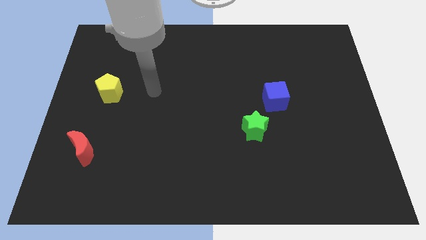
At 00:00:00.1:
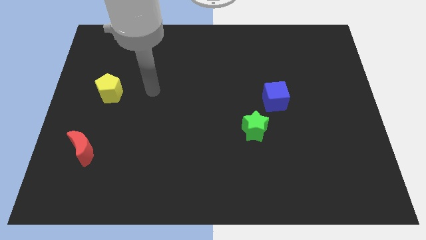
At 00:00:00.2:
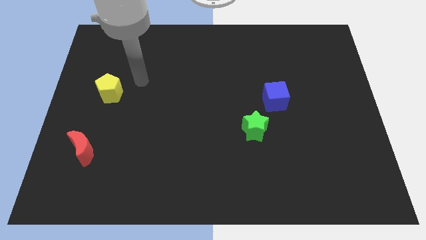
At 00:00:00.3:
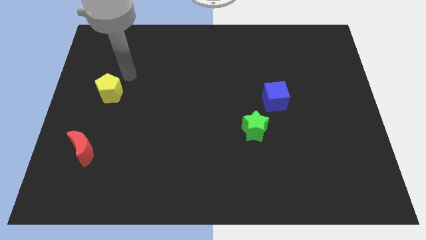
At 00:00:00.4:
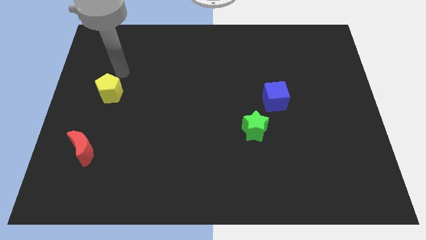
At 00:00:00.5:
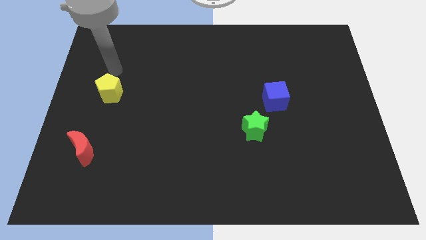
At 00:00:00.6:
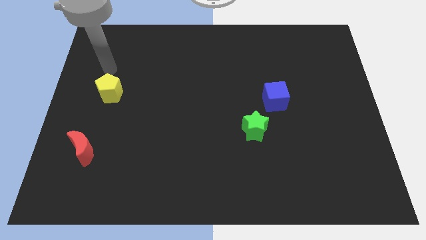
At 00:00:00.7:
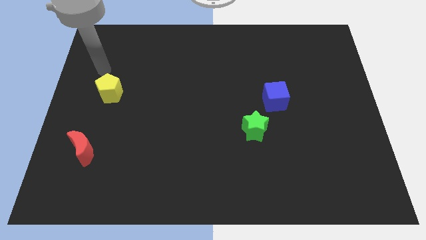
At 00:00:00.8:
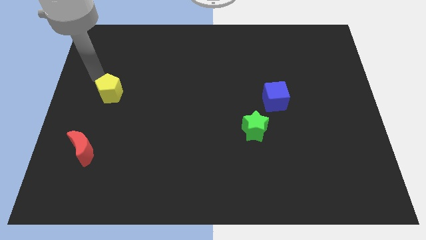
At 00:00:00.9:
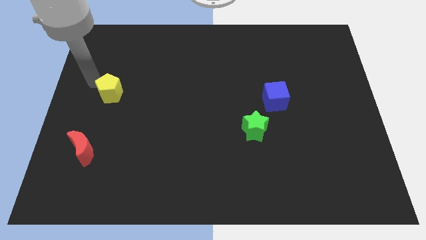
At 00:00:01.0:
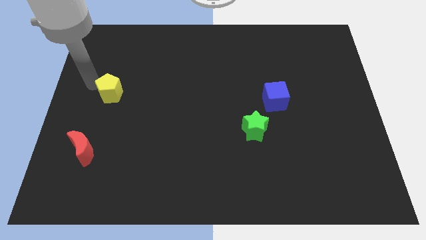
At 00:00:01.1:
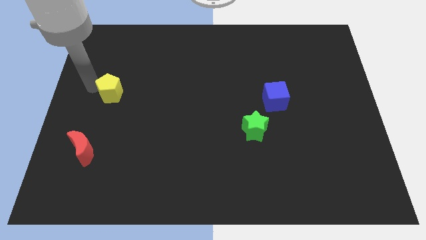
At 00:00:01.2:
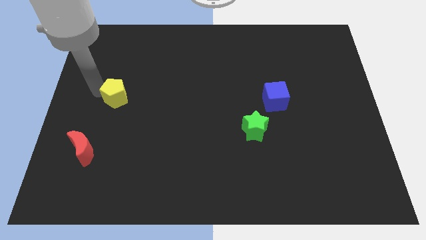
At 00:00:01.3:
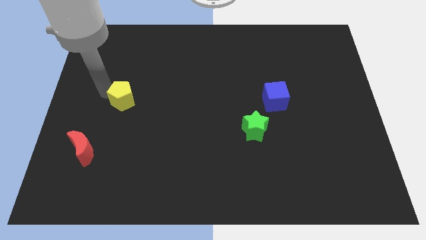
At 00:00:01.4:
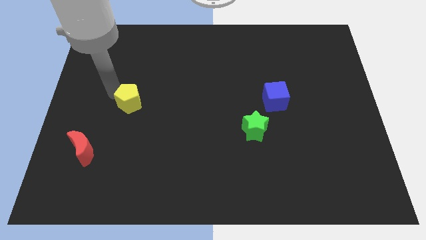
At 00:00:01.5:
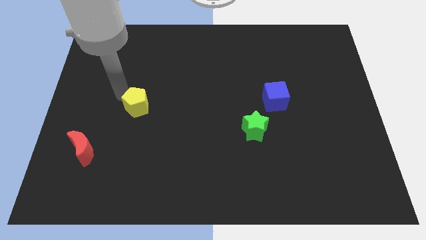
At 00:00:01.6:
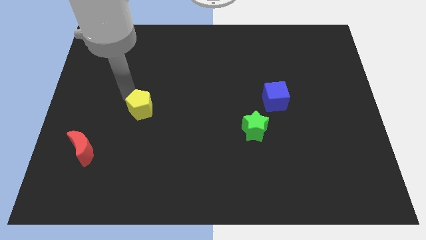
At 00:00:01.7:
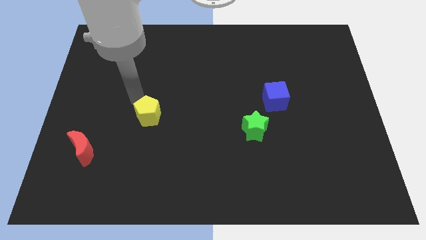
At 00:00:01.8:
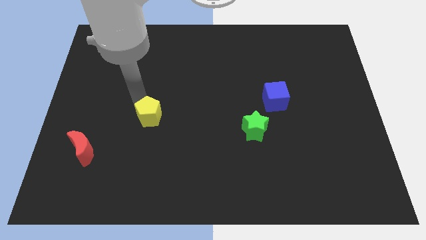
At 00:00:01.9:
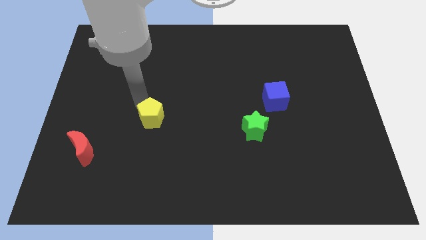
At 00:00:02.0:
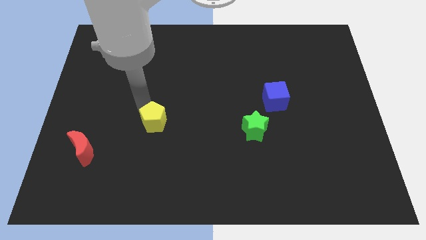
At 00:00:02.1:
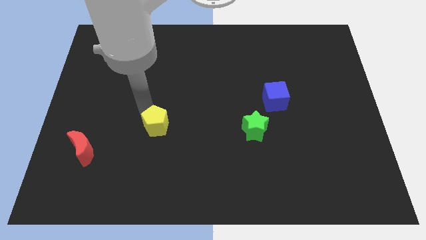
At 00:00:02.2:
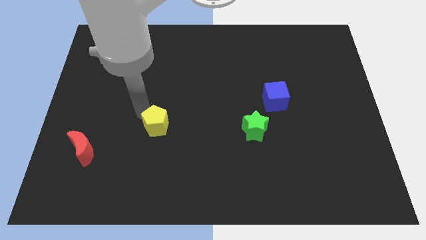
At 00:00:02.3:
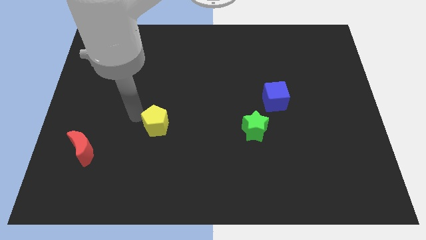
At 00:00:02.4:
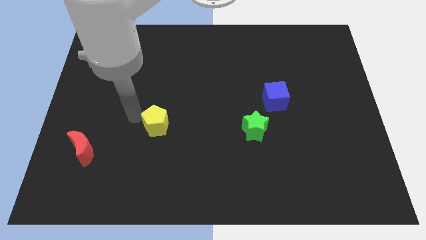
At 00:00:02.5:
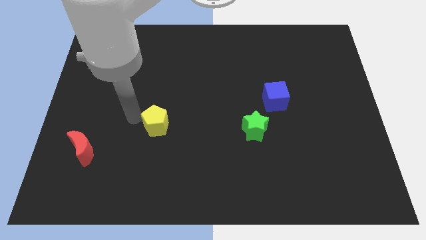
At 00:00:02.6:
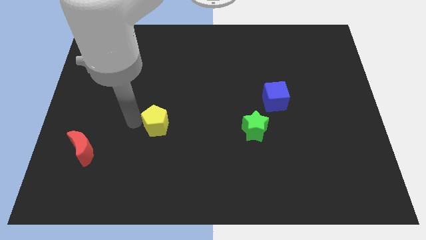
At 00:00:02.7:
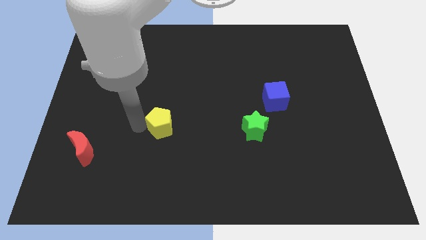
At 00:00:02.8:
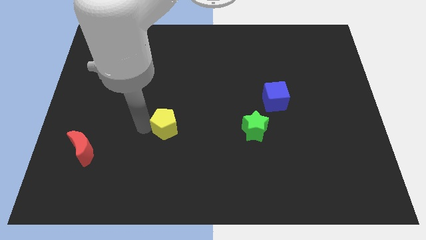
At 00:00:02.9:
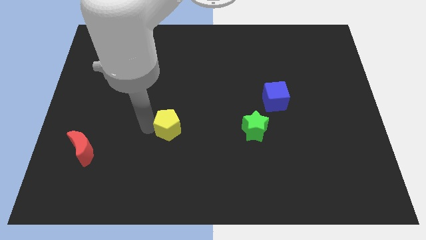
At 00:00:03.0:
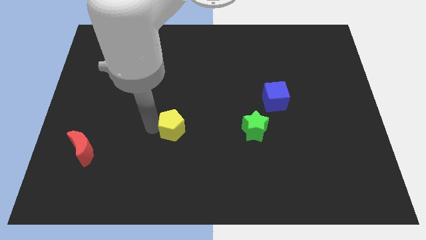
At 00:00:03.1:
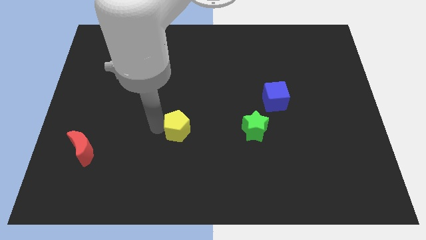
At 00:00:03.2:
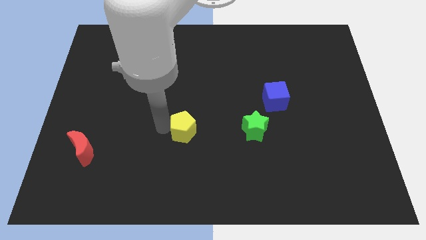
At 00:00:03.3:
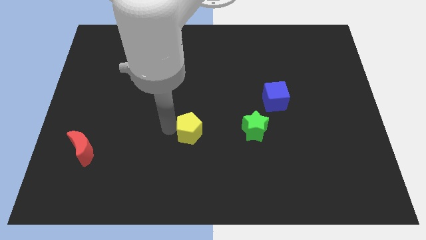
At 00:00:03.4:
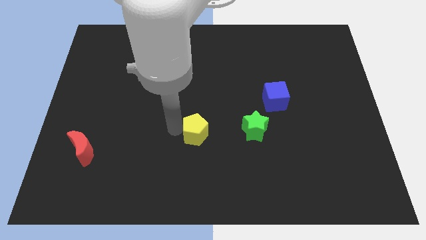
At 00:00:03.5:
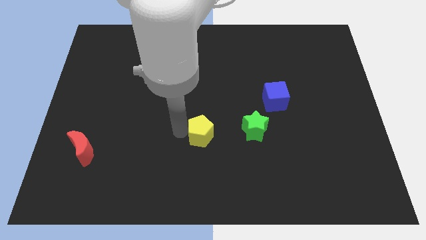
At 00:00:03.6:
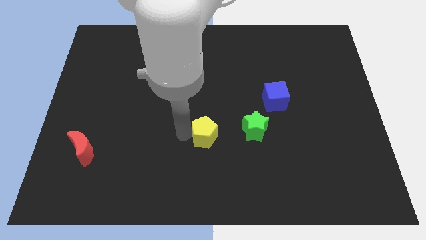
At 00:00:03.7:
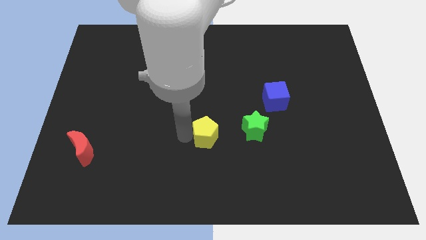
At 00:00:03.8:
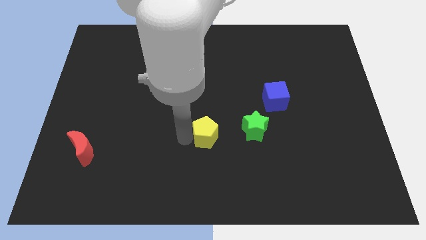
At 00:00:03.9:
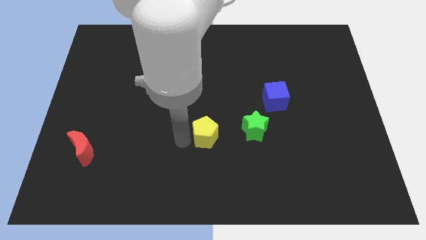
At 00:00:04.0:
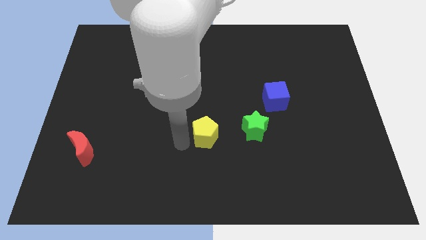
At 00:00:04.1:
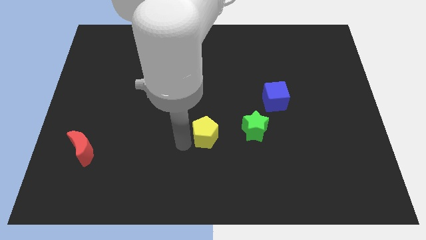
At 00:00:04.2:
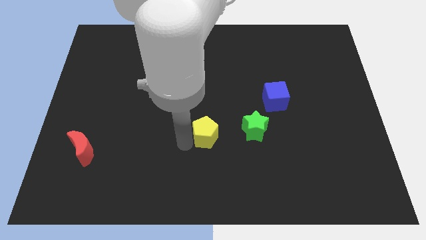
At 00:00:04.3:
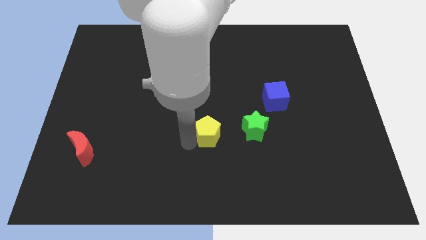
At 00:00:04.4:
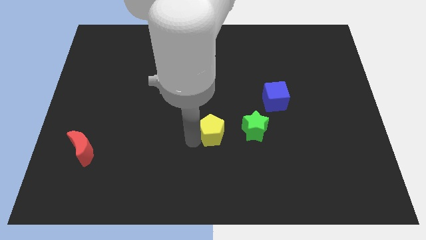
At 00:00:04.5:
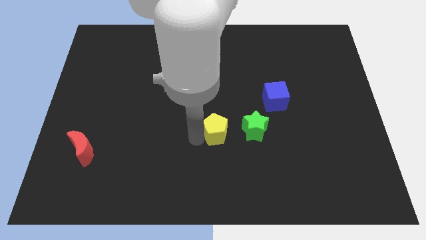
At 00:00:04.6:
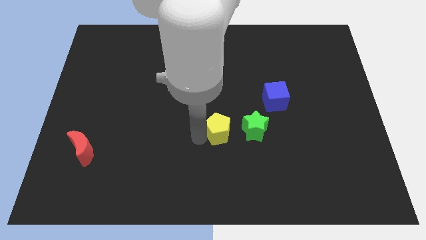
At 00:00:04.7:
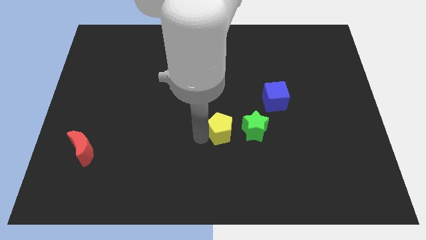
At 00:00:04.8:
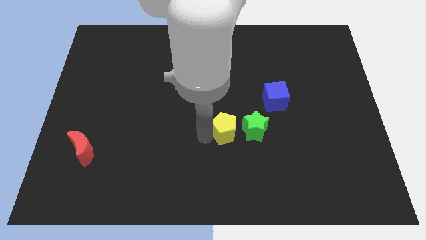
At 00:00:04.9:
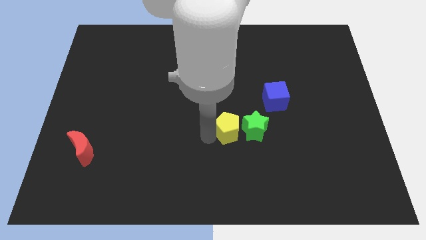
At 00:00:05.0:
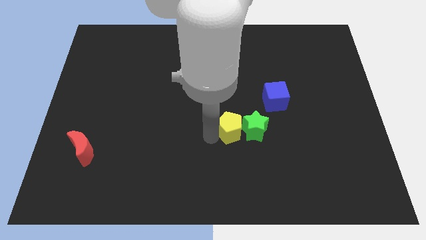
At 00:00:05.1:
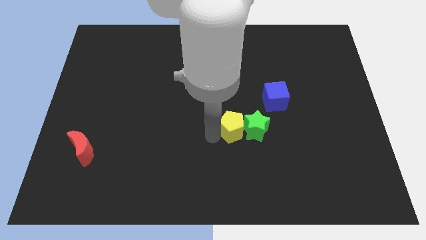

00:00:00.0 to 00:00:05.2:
push the pentagon towards the green block

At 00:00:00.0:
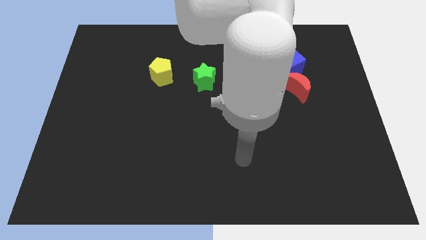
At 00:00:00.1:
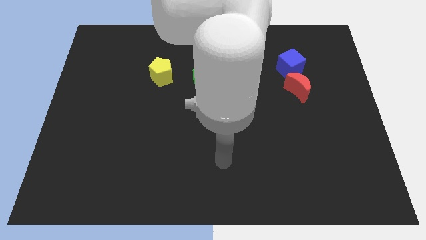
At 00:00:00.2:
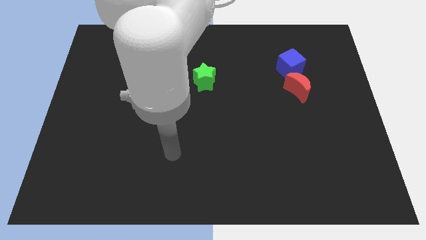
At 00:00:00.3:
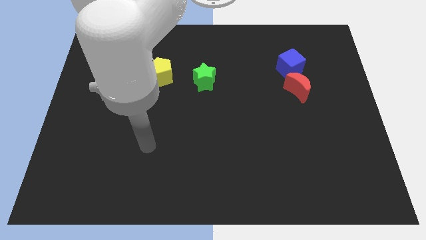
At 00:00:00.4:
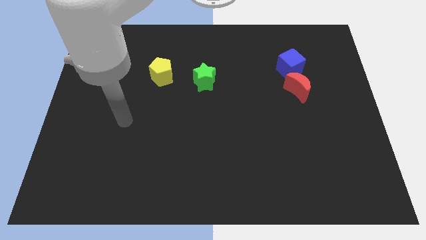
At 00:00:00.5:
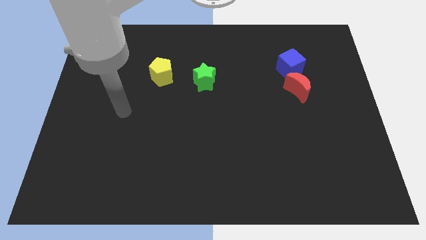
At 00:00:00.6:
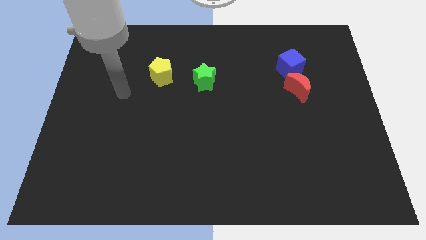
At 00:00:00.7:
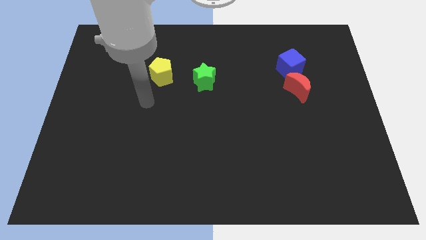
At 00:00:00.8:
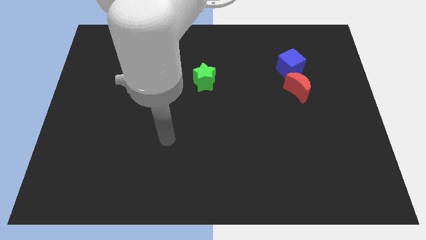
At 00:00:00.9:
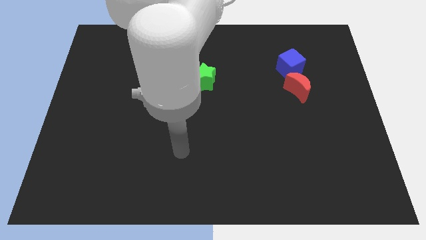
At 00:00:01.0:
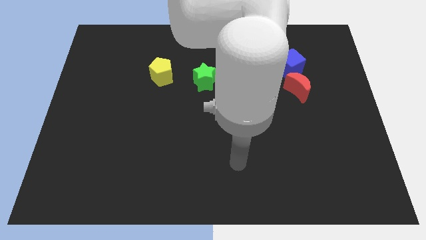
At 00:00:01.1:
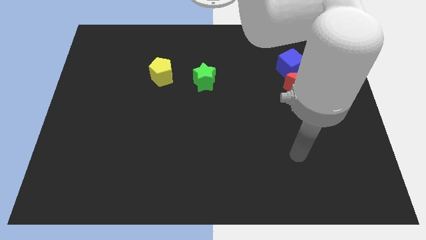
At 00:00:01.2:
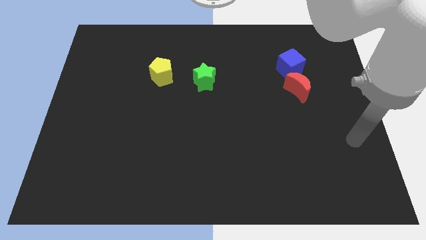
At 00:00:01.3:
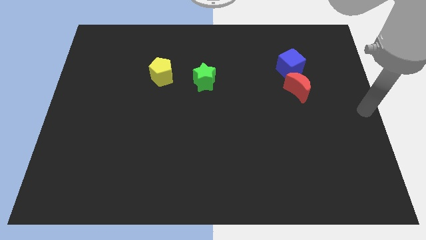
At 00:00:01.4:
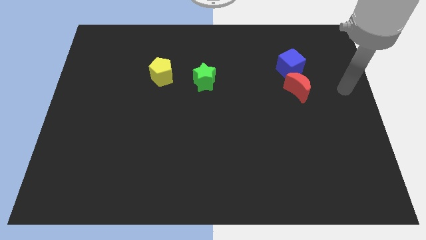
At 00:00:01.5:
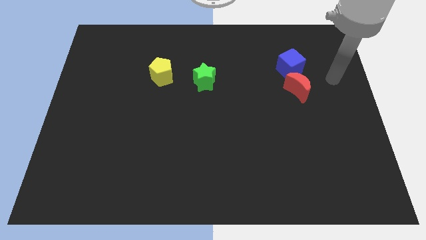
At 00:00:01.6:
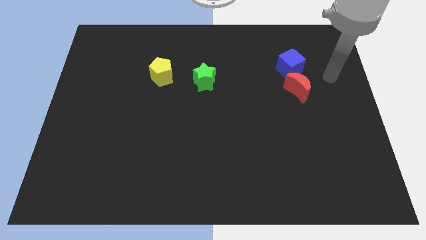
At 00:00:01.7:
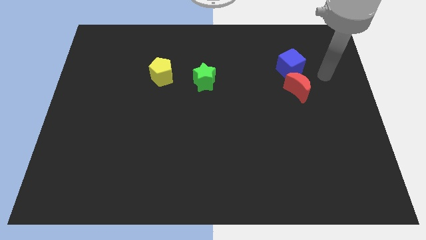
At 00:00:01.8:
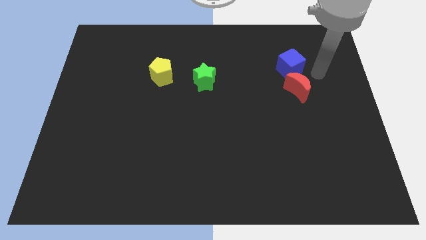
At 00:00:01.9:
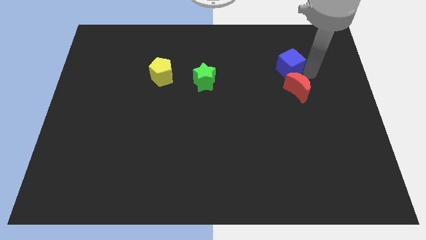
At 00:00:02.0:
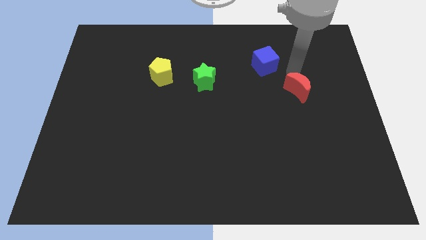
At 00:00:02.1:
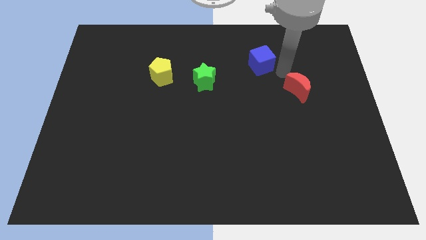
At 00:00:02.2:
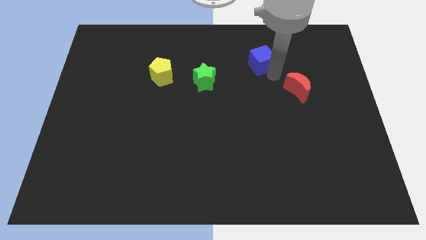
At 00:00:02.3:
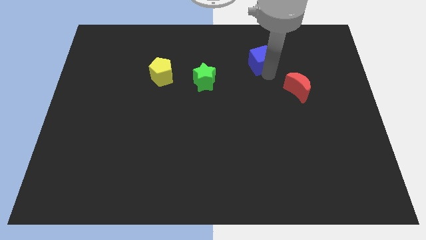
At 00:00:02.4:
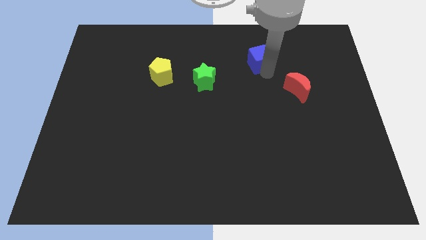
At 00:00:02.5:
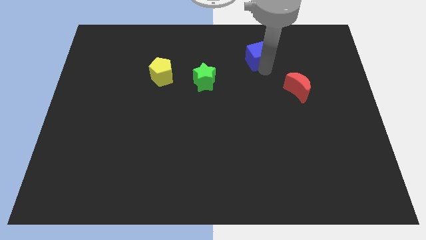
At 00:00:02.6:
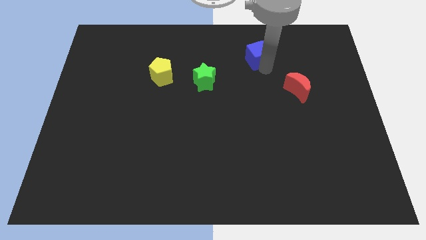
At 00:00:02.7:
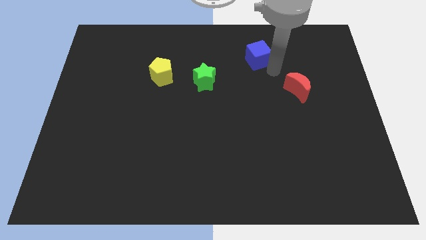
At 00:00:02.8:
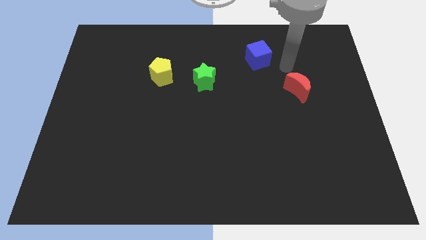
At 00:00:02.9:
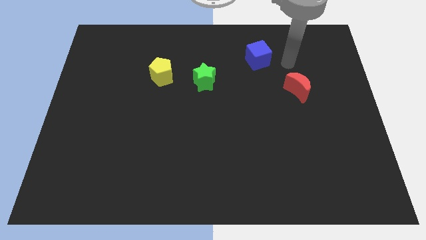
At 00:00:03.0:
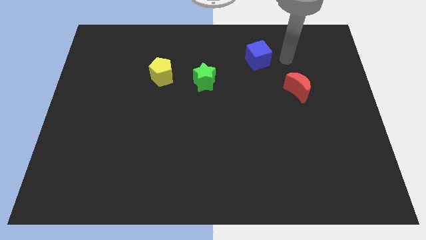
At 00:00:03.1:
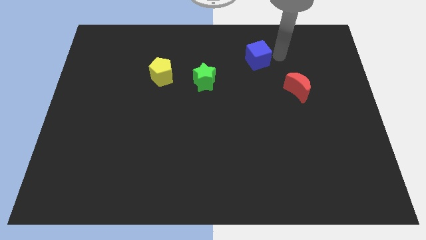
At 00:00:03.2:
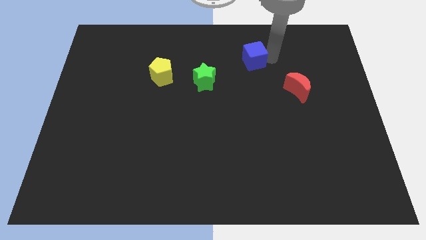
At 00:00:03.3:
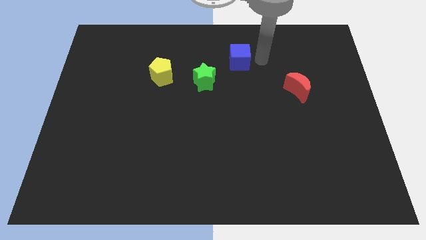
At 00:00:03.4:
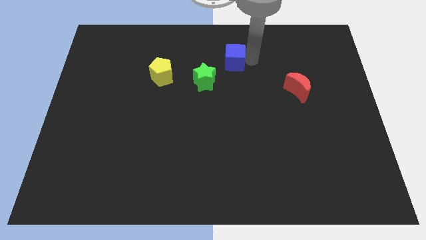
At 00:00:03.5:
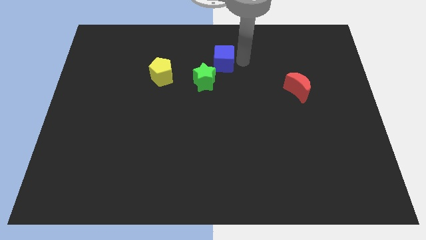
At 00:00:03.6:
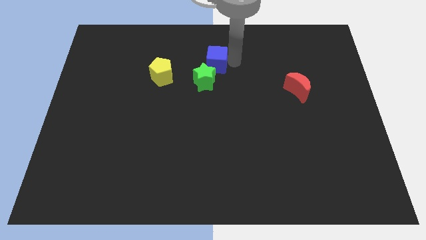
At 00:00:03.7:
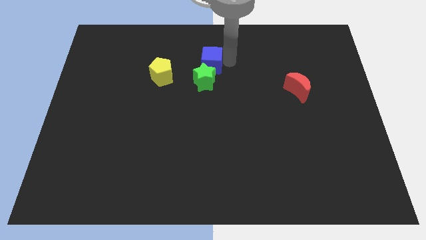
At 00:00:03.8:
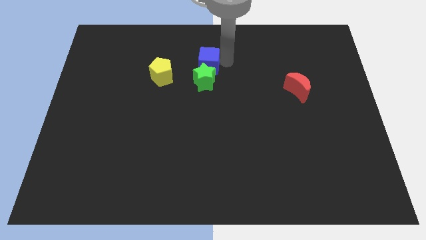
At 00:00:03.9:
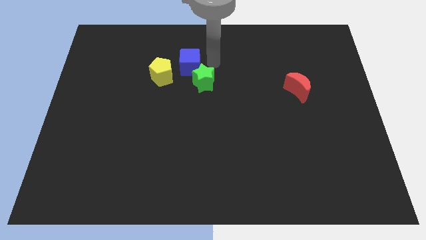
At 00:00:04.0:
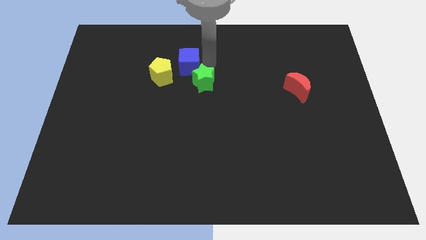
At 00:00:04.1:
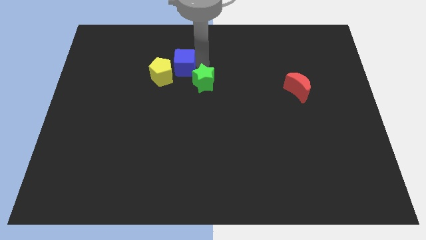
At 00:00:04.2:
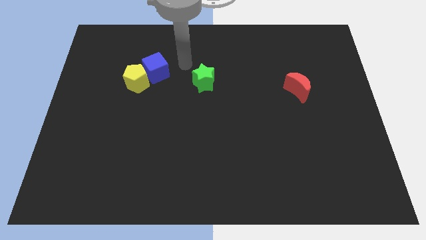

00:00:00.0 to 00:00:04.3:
move the blue block close to the pentagon
